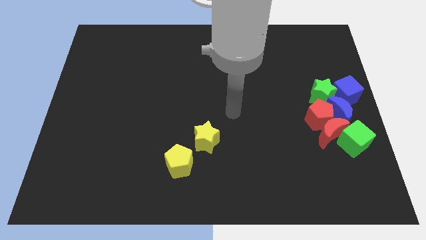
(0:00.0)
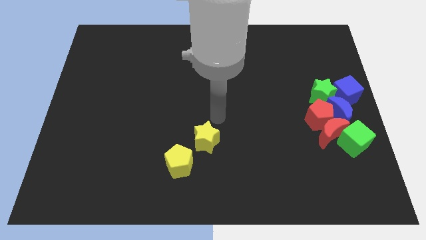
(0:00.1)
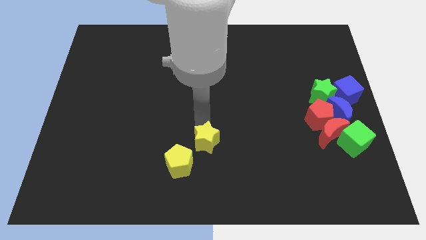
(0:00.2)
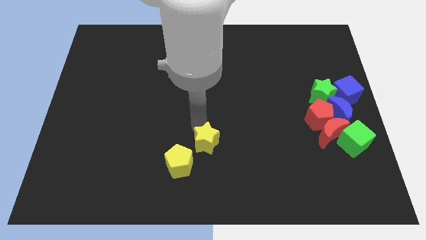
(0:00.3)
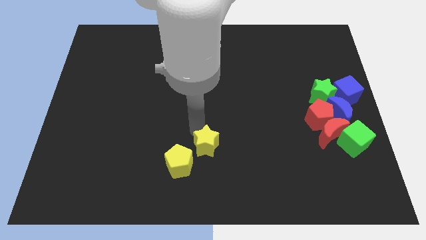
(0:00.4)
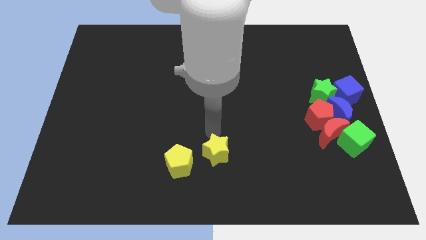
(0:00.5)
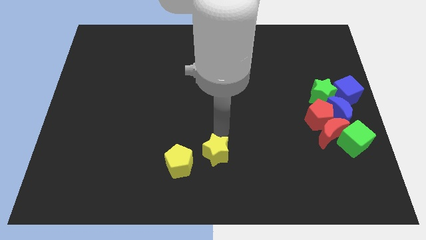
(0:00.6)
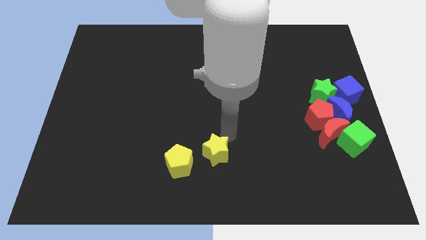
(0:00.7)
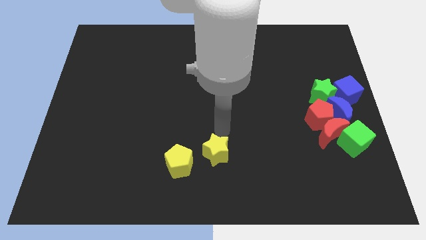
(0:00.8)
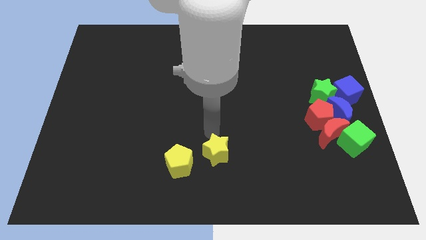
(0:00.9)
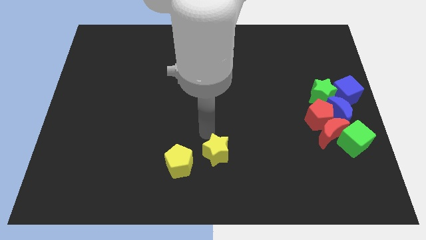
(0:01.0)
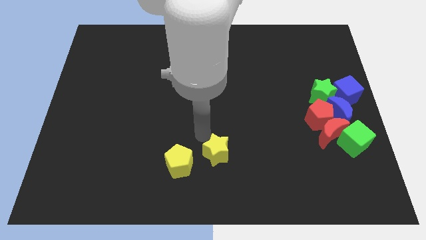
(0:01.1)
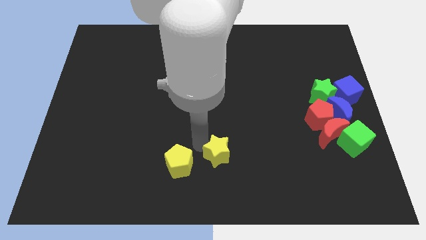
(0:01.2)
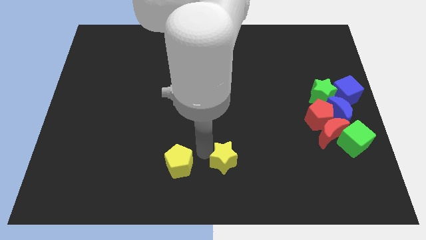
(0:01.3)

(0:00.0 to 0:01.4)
move the yellow star to the right of the yellow pentagon

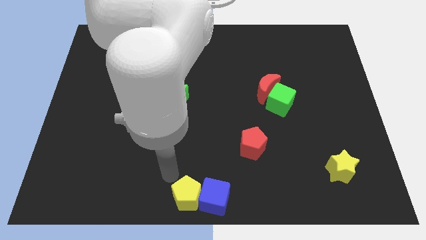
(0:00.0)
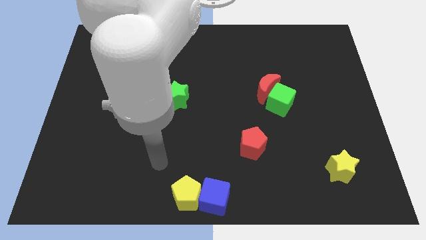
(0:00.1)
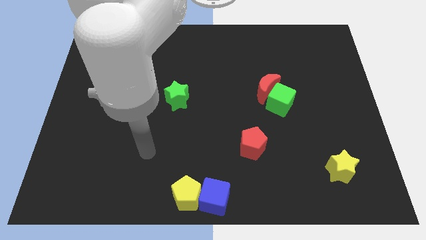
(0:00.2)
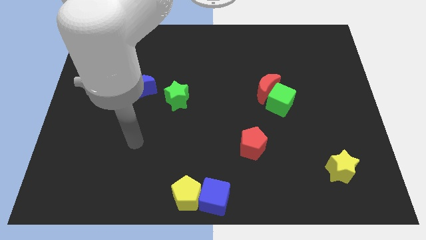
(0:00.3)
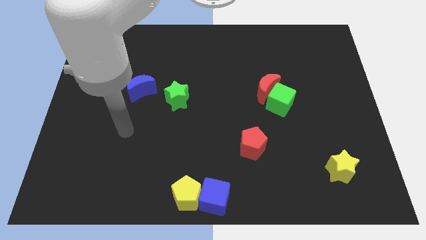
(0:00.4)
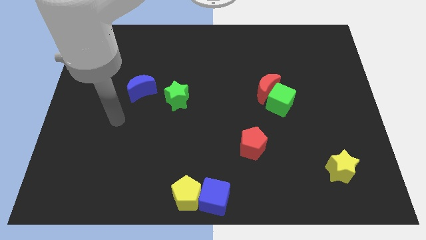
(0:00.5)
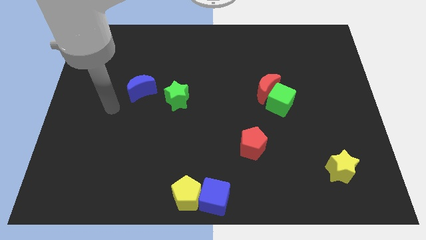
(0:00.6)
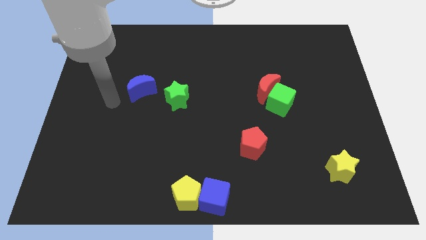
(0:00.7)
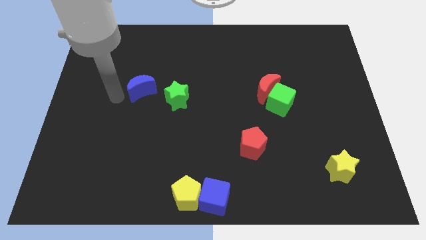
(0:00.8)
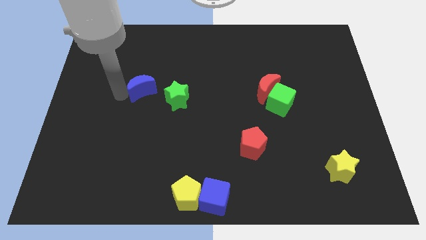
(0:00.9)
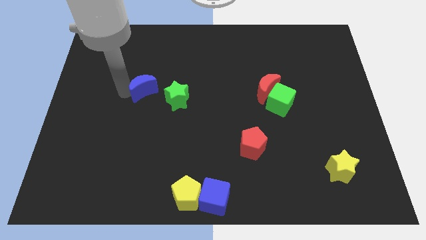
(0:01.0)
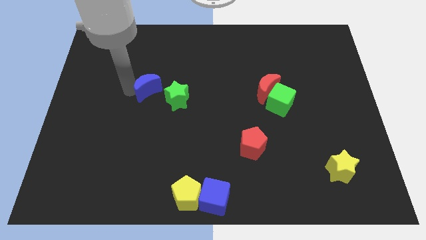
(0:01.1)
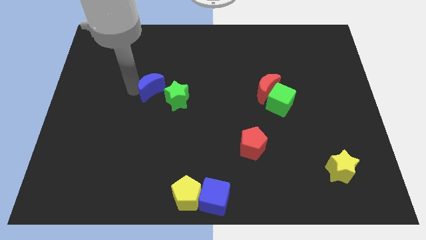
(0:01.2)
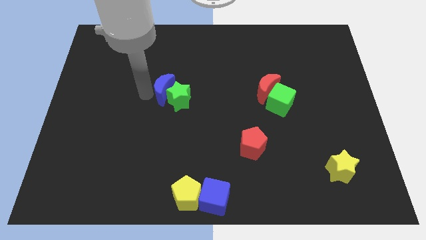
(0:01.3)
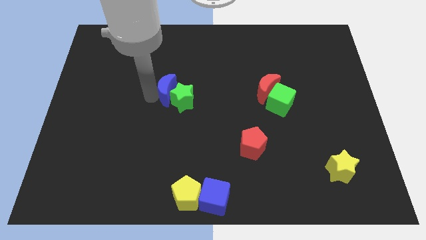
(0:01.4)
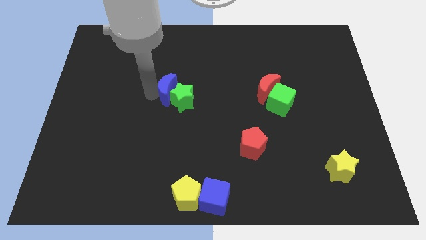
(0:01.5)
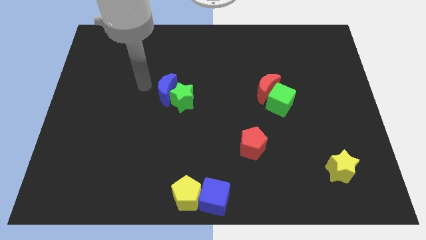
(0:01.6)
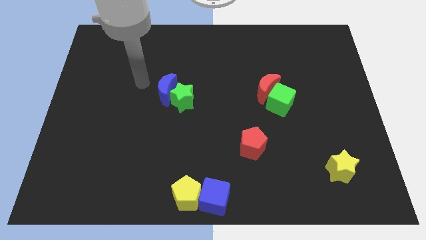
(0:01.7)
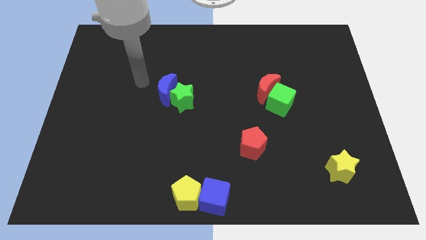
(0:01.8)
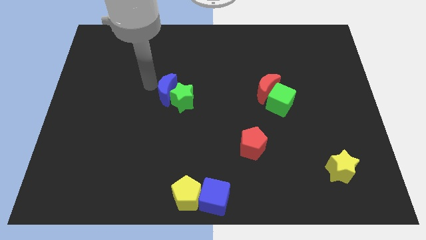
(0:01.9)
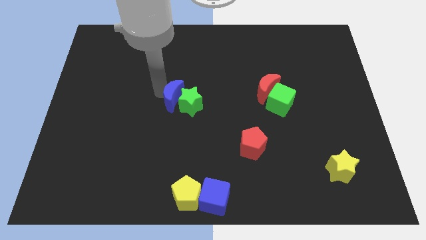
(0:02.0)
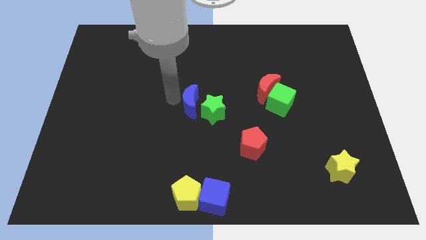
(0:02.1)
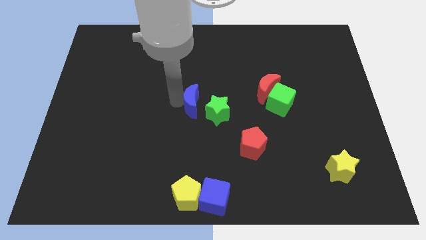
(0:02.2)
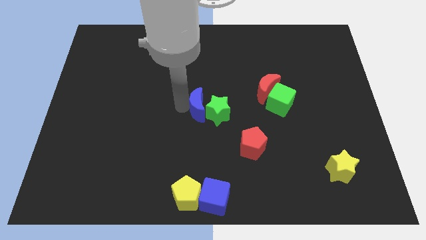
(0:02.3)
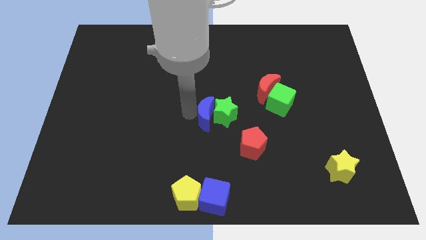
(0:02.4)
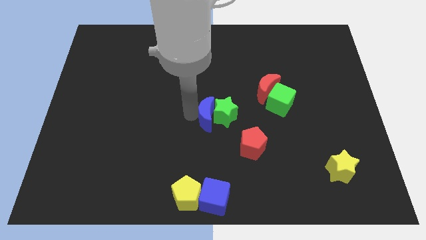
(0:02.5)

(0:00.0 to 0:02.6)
move the blue crescent into the green star

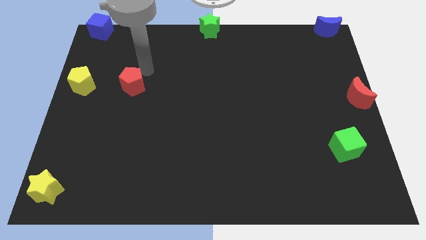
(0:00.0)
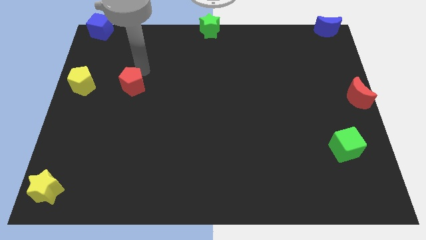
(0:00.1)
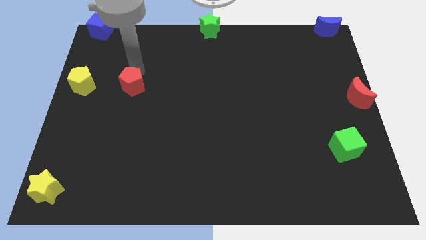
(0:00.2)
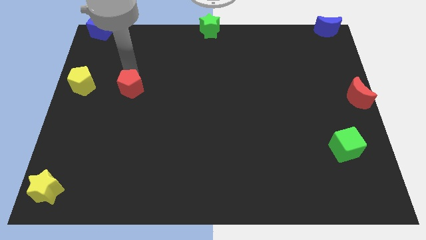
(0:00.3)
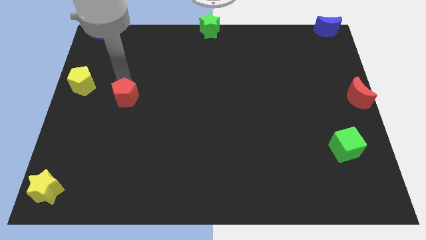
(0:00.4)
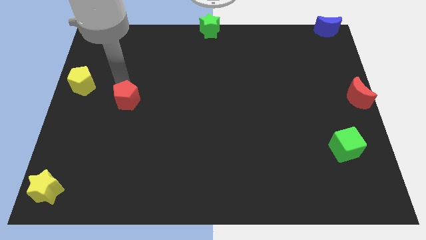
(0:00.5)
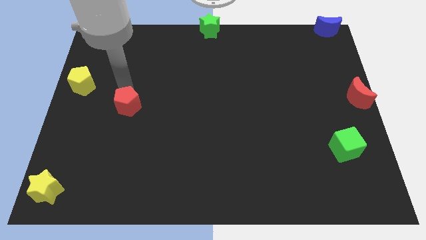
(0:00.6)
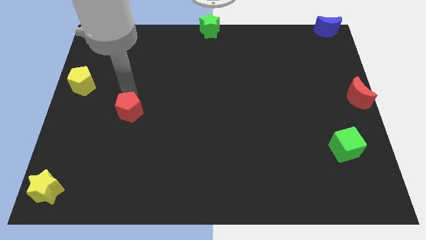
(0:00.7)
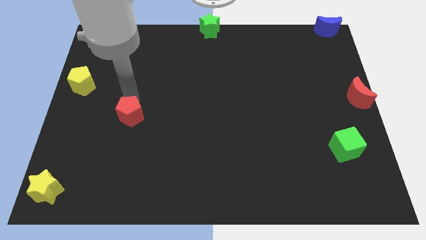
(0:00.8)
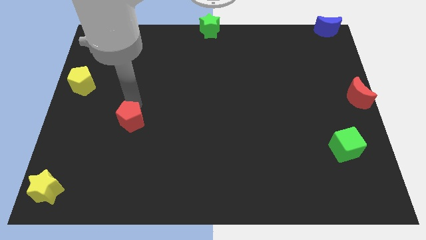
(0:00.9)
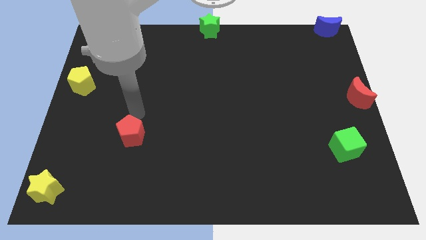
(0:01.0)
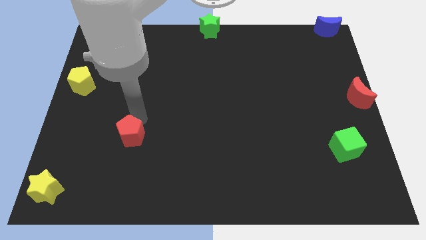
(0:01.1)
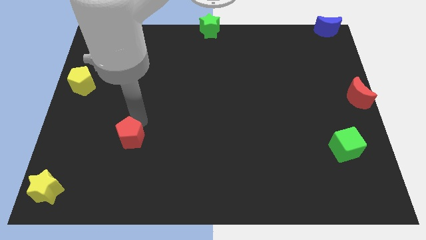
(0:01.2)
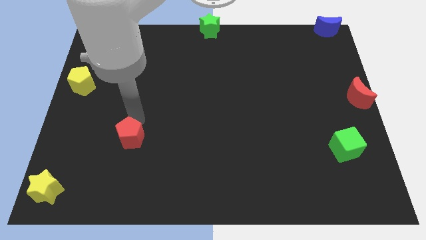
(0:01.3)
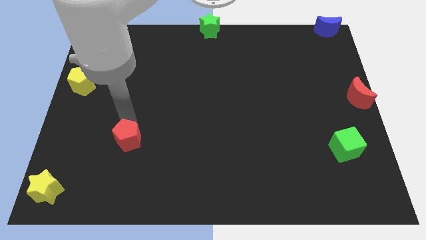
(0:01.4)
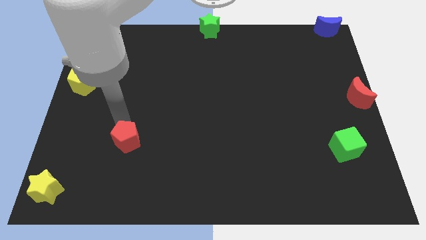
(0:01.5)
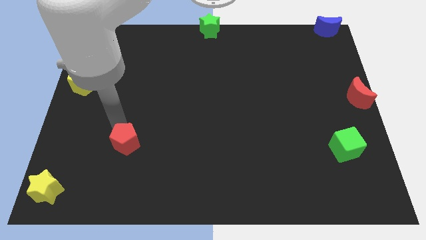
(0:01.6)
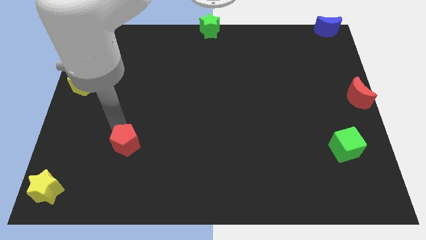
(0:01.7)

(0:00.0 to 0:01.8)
push red pentagon slightly towards down

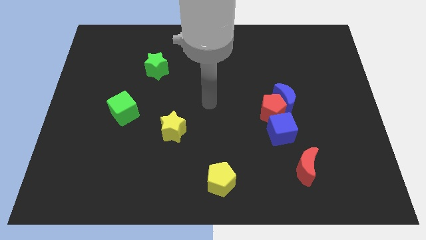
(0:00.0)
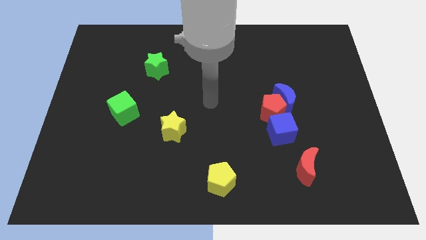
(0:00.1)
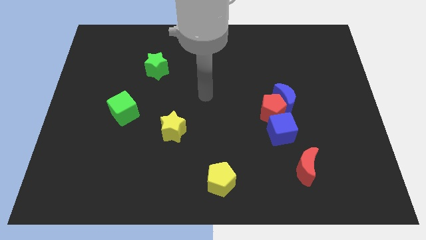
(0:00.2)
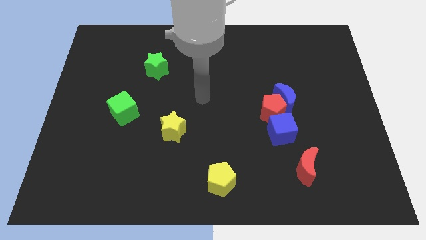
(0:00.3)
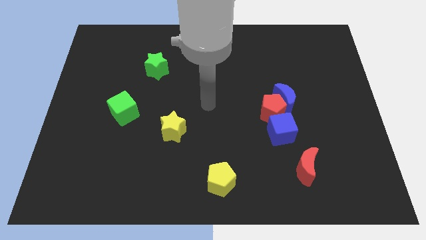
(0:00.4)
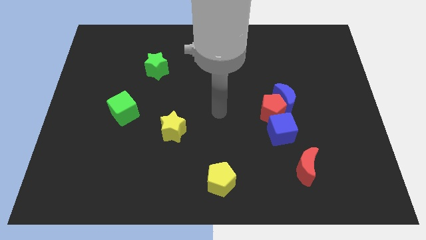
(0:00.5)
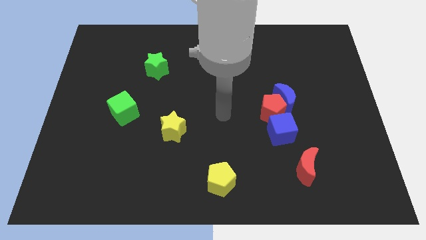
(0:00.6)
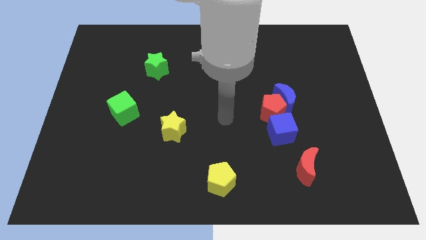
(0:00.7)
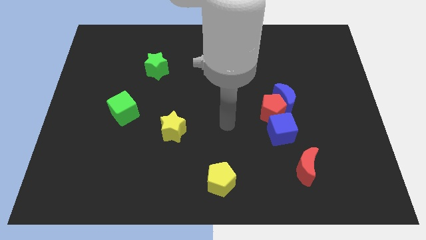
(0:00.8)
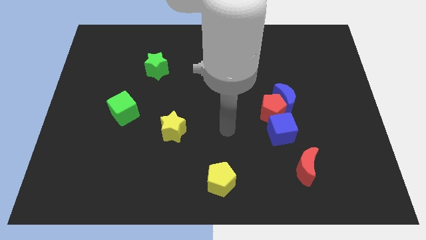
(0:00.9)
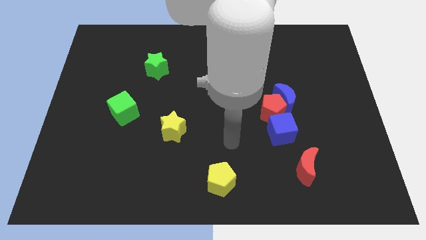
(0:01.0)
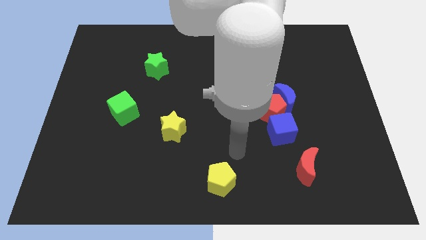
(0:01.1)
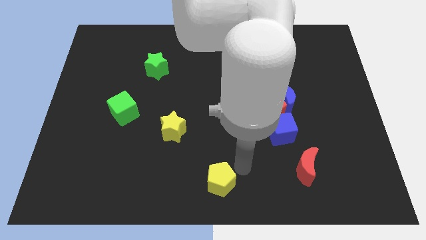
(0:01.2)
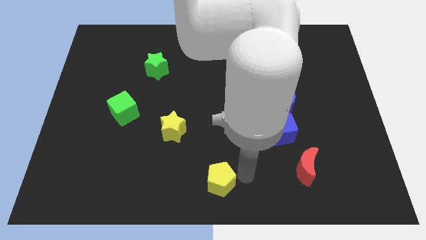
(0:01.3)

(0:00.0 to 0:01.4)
move your arm towards the yellow pentagon

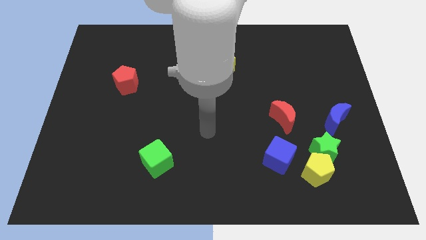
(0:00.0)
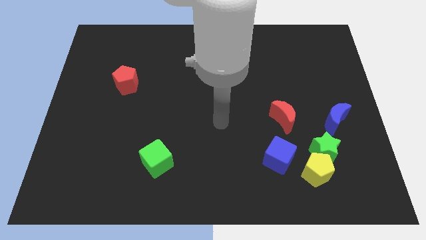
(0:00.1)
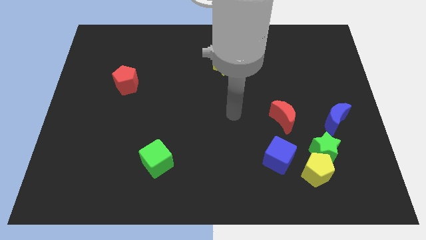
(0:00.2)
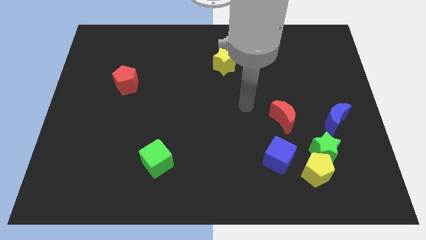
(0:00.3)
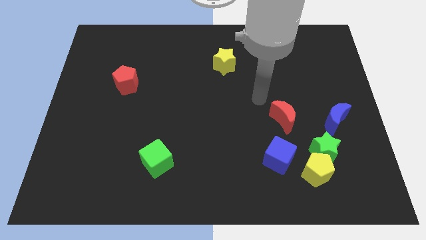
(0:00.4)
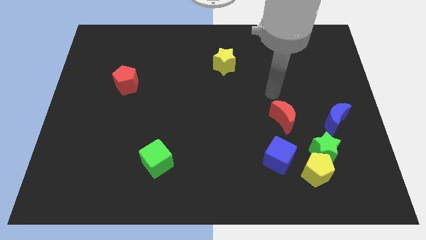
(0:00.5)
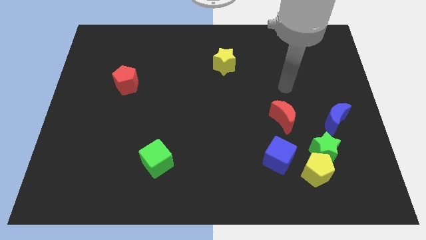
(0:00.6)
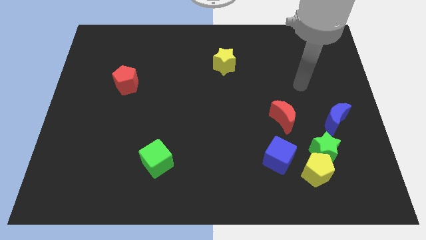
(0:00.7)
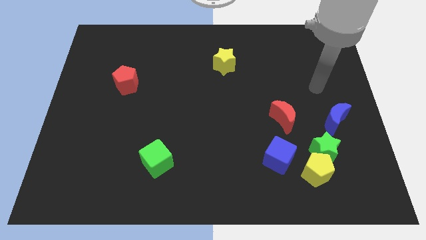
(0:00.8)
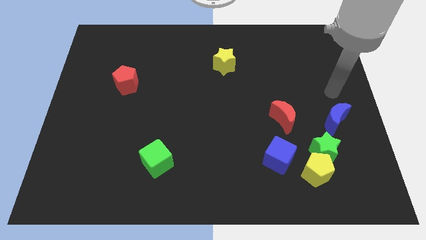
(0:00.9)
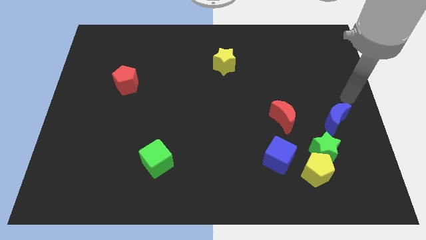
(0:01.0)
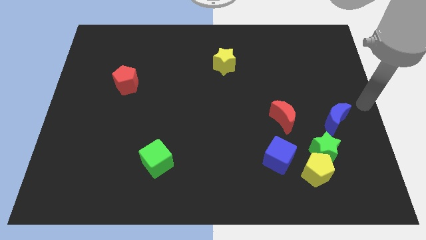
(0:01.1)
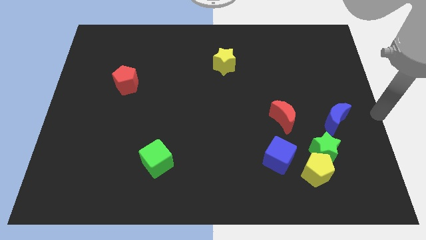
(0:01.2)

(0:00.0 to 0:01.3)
place your arm at the center right of the board

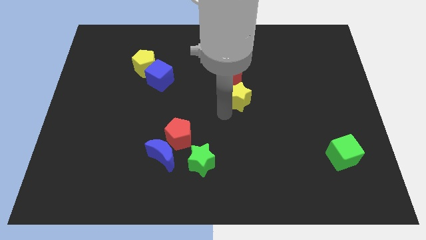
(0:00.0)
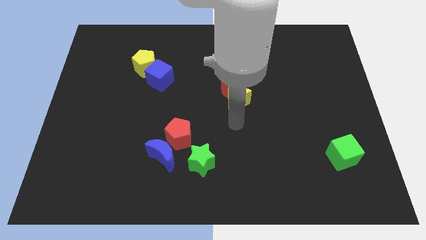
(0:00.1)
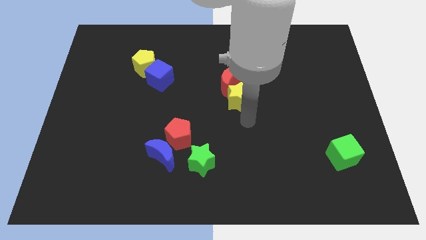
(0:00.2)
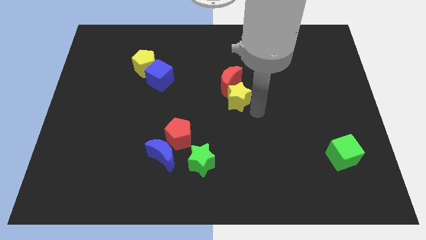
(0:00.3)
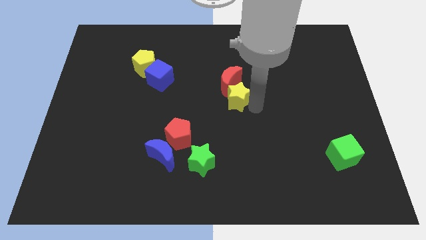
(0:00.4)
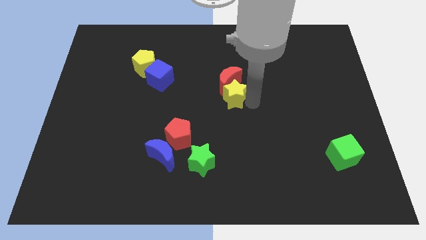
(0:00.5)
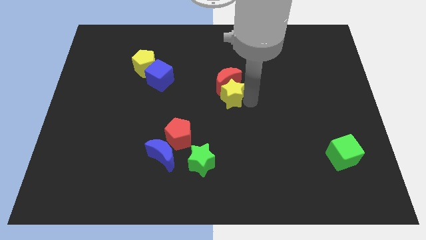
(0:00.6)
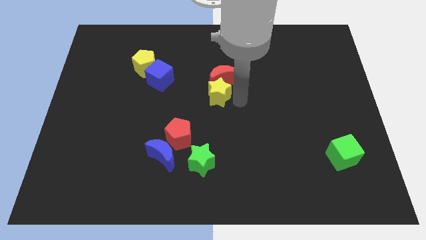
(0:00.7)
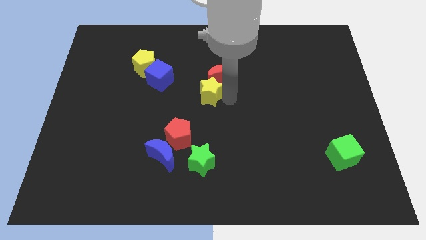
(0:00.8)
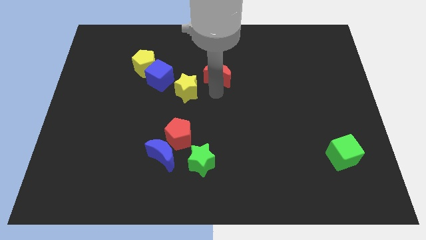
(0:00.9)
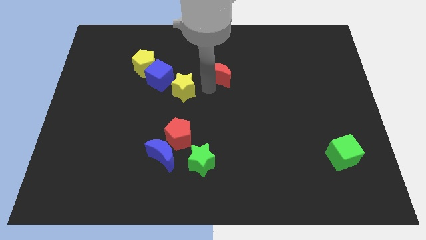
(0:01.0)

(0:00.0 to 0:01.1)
move yellow star towards blue cube
